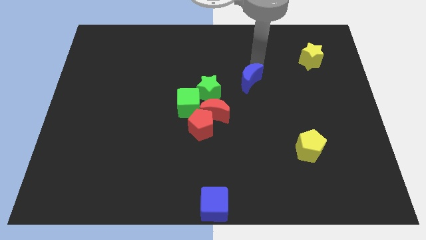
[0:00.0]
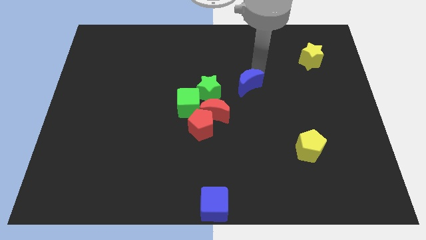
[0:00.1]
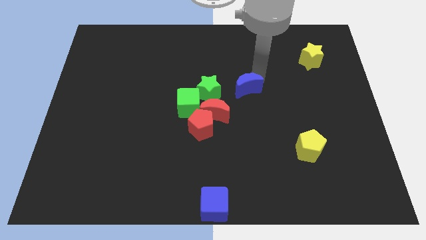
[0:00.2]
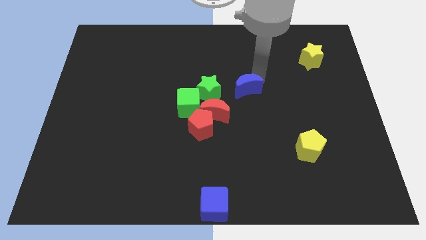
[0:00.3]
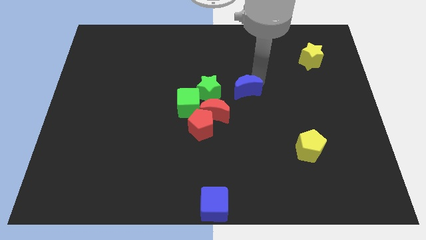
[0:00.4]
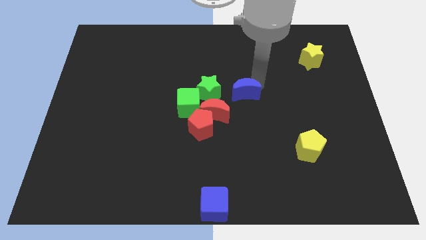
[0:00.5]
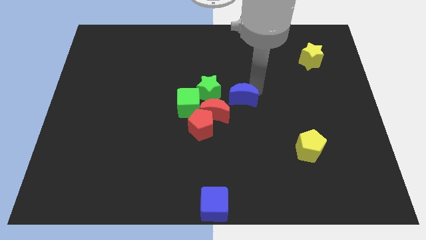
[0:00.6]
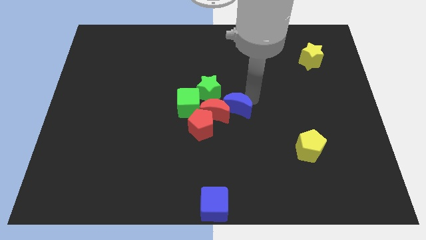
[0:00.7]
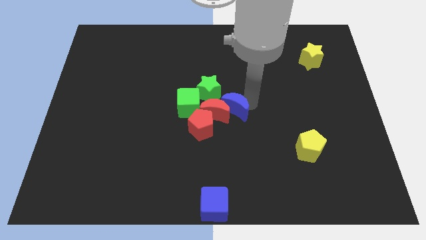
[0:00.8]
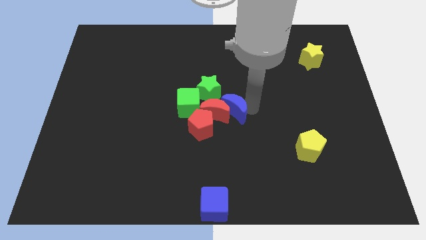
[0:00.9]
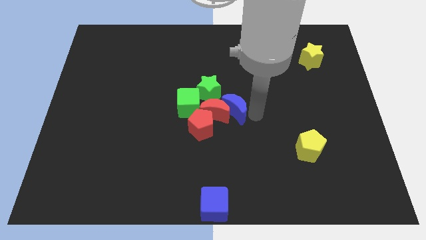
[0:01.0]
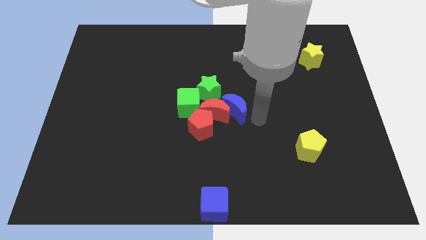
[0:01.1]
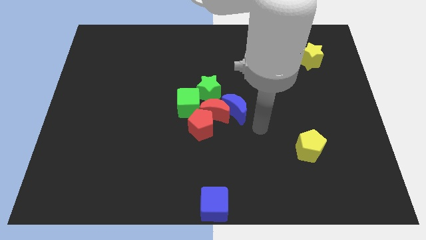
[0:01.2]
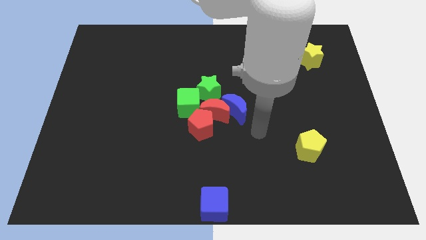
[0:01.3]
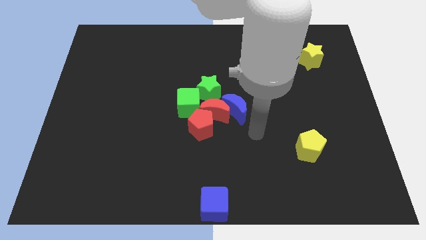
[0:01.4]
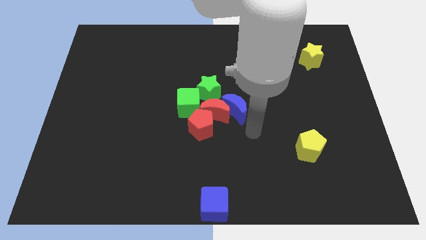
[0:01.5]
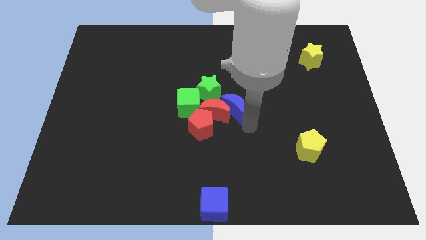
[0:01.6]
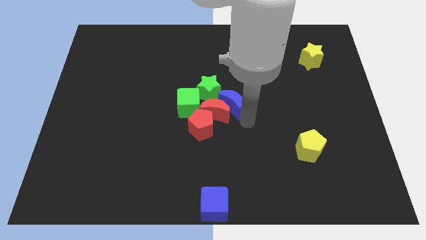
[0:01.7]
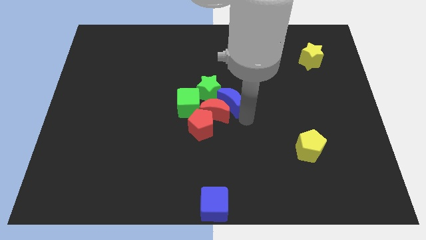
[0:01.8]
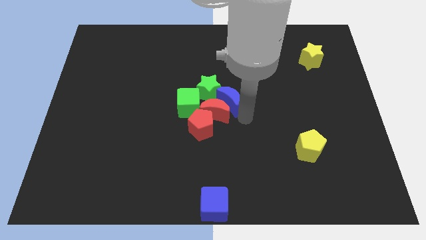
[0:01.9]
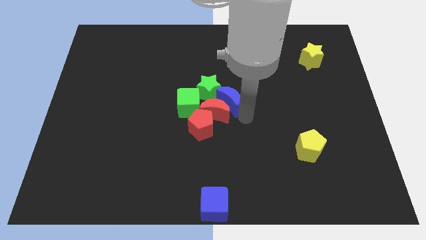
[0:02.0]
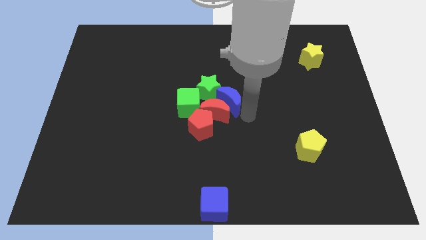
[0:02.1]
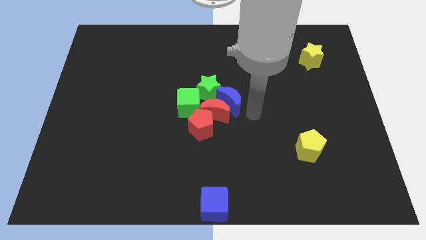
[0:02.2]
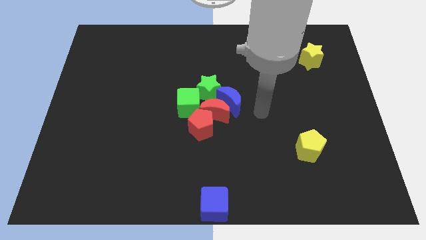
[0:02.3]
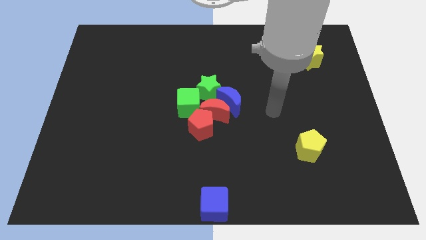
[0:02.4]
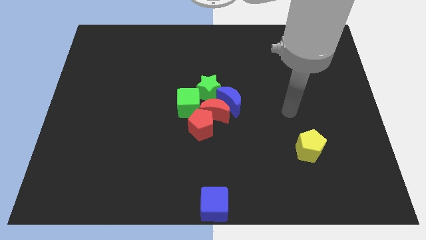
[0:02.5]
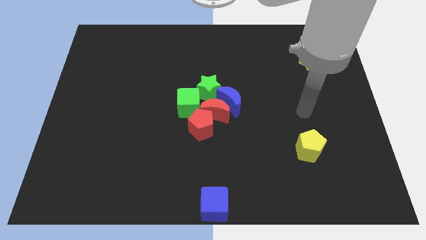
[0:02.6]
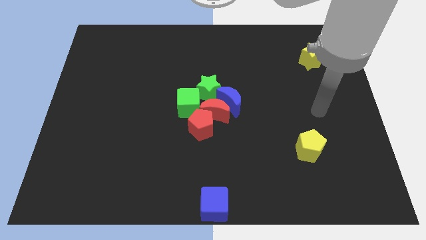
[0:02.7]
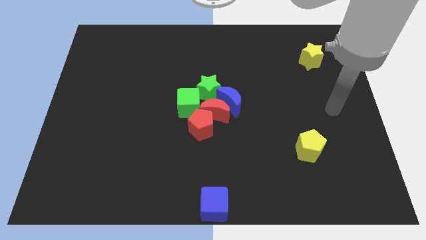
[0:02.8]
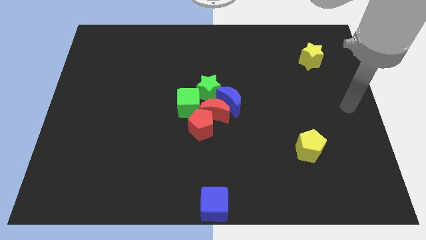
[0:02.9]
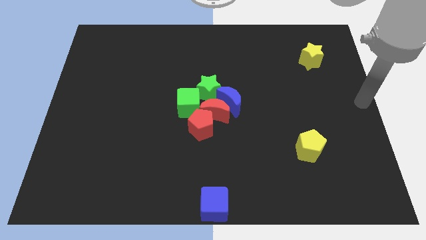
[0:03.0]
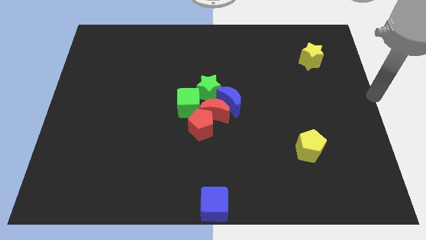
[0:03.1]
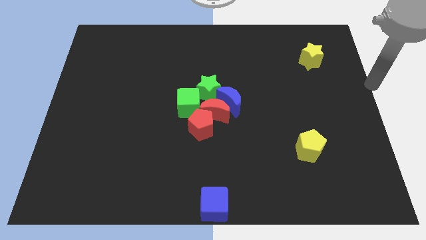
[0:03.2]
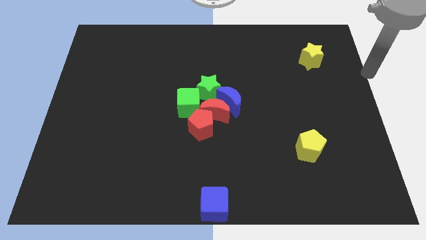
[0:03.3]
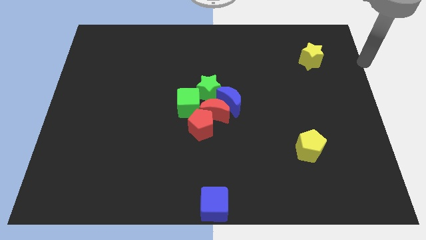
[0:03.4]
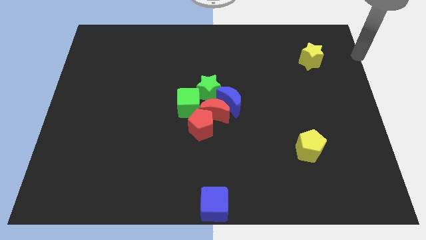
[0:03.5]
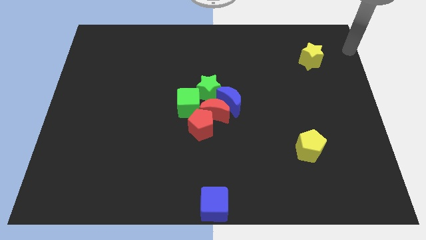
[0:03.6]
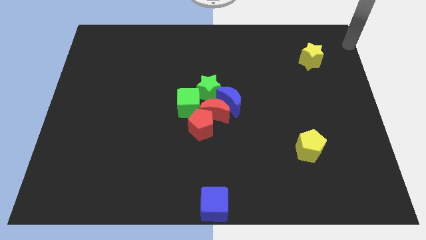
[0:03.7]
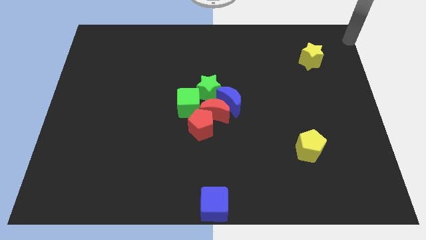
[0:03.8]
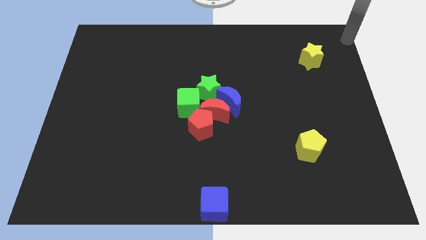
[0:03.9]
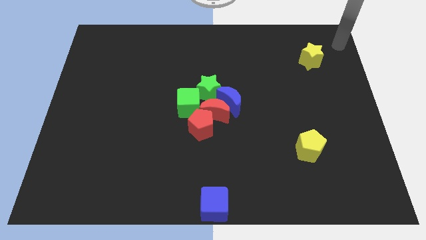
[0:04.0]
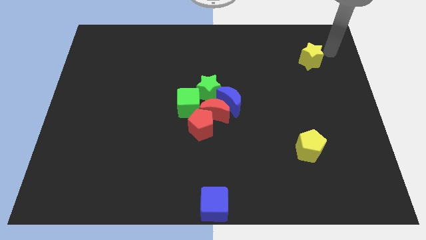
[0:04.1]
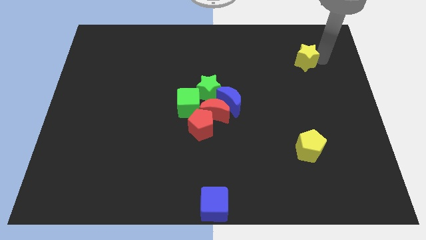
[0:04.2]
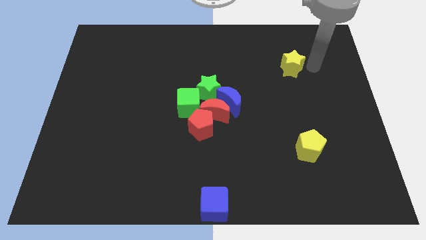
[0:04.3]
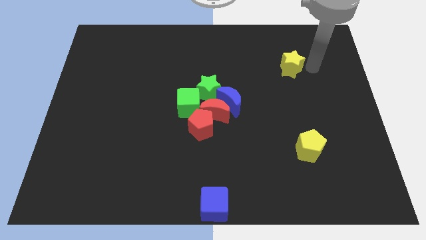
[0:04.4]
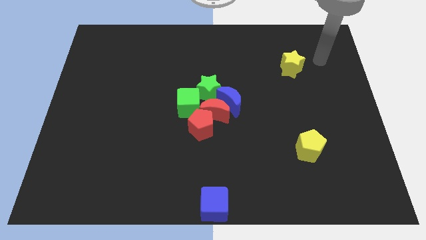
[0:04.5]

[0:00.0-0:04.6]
place the blue moon beside the green star

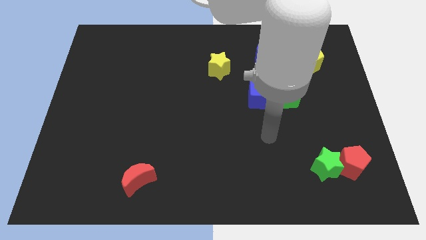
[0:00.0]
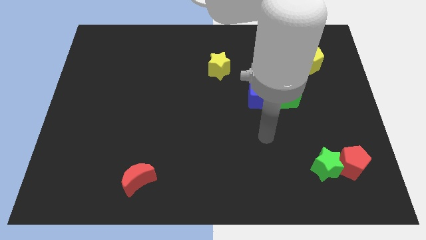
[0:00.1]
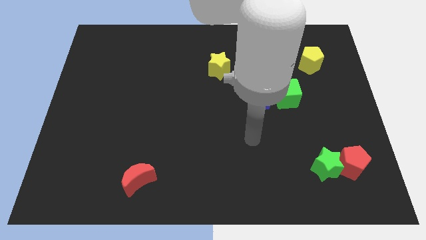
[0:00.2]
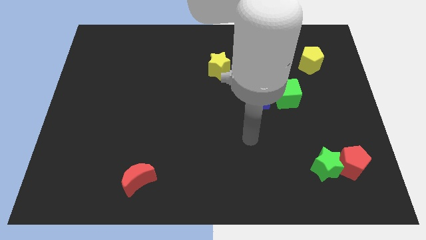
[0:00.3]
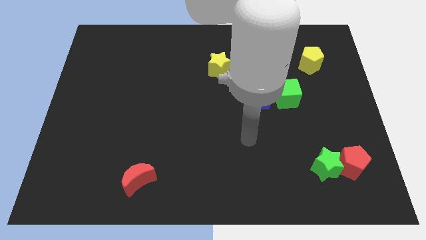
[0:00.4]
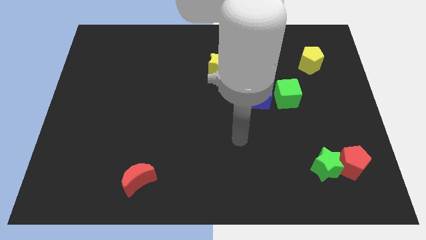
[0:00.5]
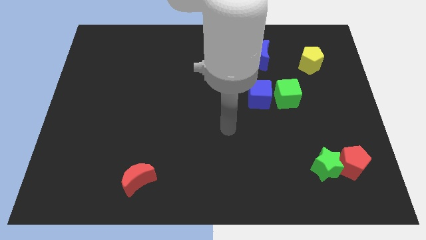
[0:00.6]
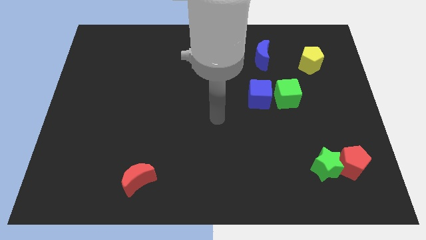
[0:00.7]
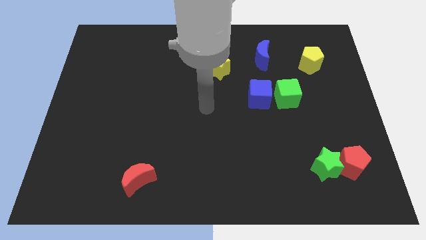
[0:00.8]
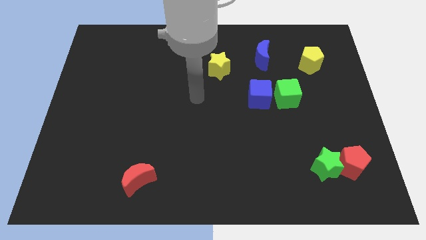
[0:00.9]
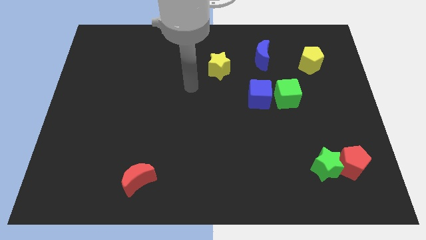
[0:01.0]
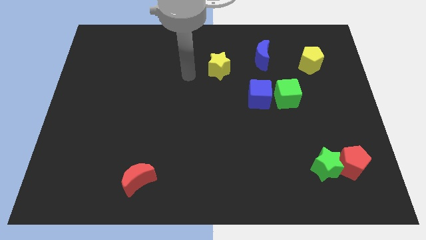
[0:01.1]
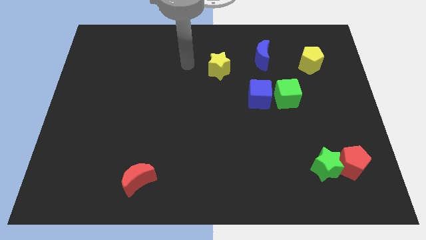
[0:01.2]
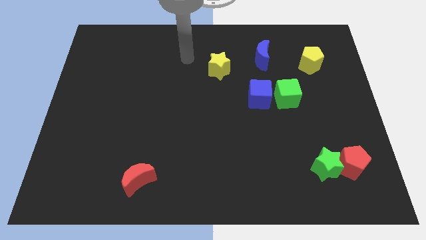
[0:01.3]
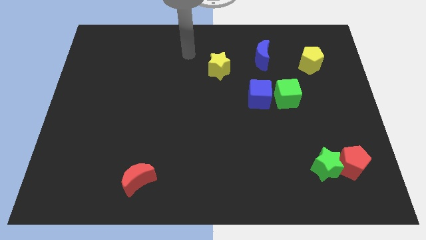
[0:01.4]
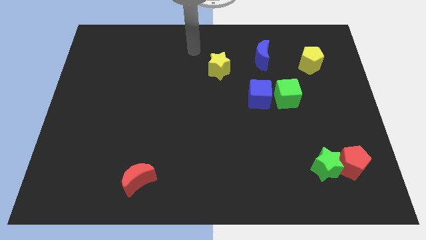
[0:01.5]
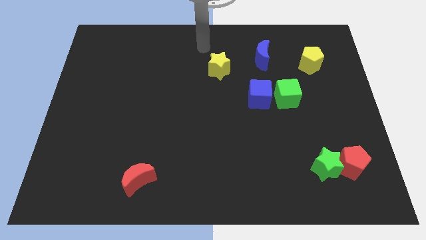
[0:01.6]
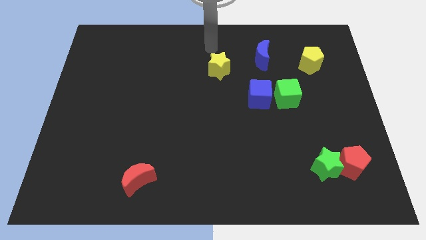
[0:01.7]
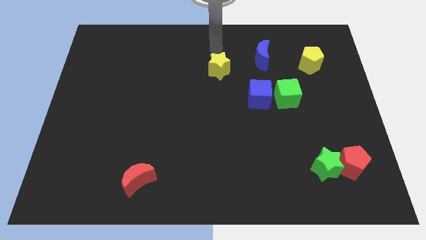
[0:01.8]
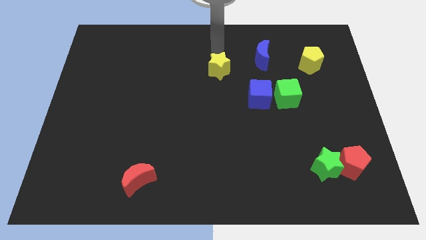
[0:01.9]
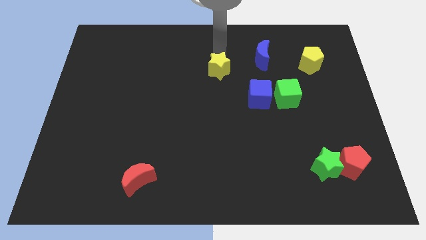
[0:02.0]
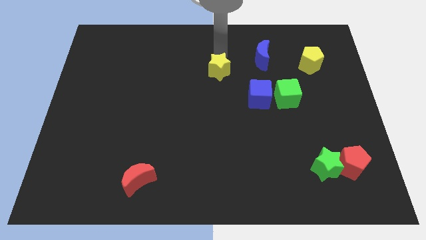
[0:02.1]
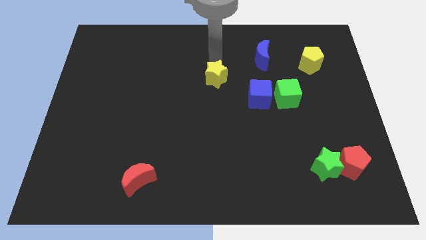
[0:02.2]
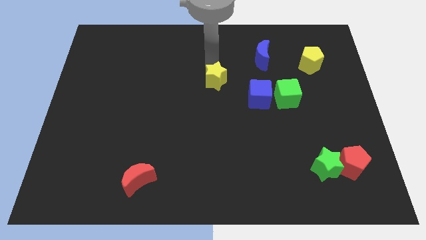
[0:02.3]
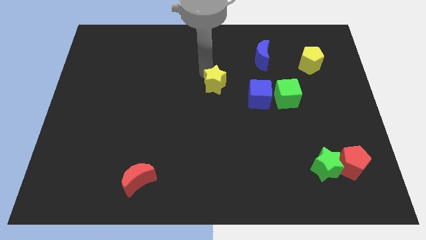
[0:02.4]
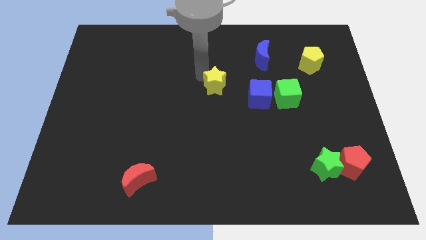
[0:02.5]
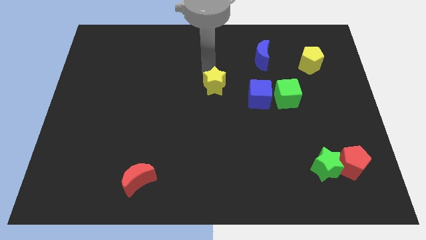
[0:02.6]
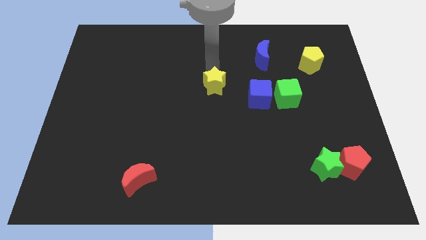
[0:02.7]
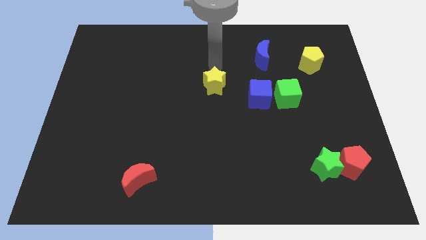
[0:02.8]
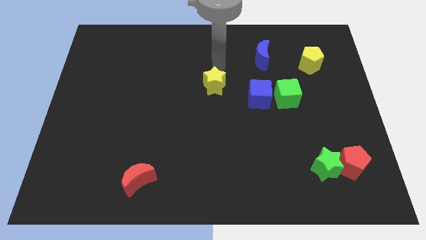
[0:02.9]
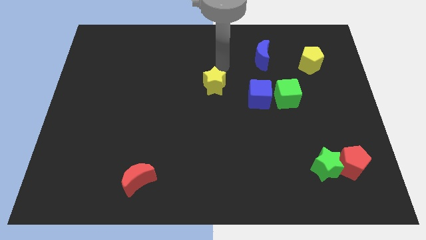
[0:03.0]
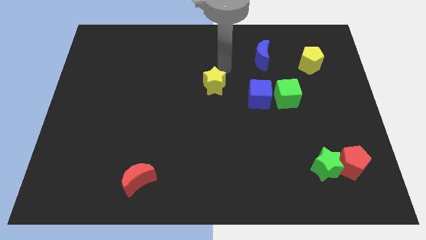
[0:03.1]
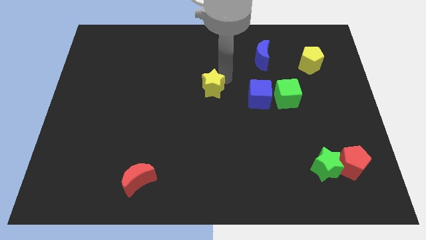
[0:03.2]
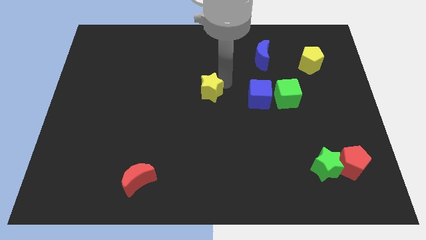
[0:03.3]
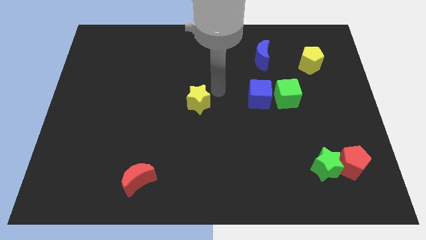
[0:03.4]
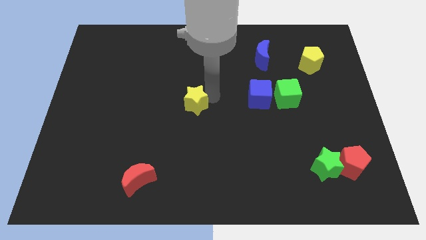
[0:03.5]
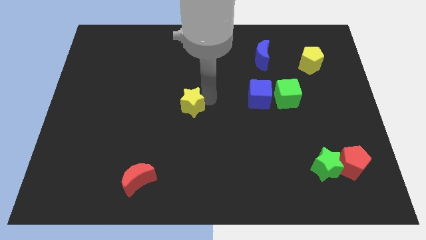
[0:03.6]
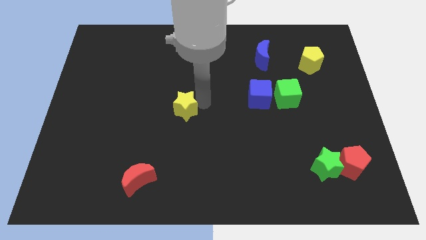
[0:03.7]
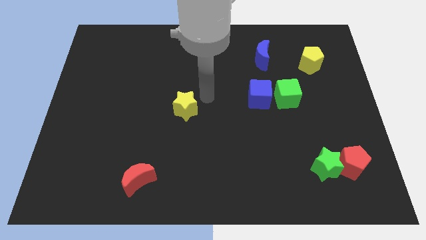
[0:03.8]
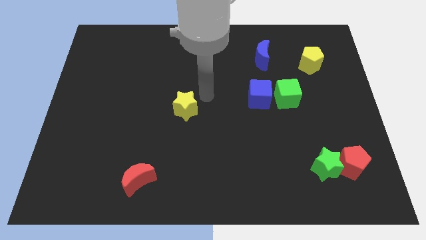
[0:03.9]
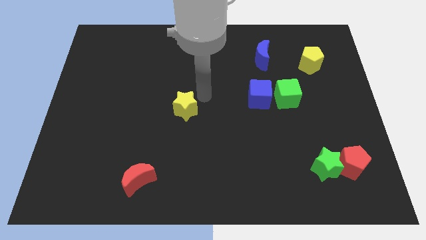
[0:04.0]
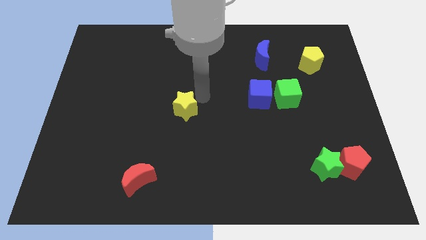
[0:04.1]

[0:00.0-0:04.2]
move the yellow star to the center of the board
